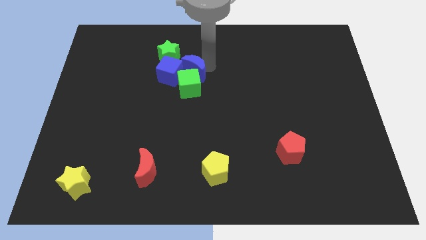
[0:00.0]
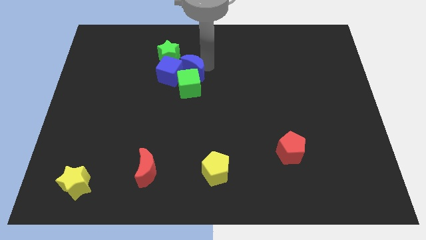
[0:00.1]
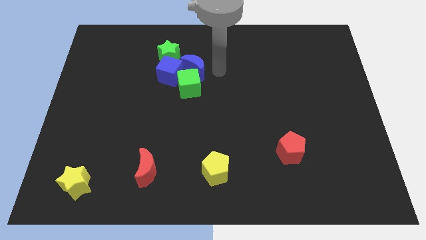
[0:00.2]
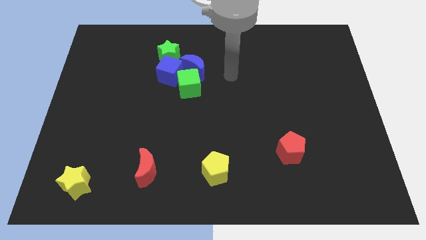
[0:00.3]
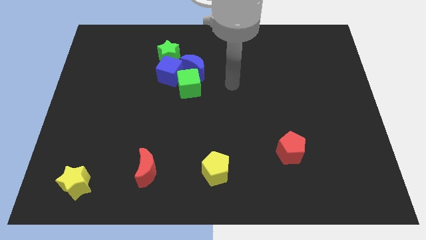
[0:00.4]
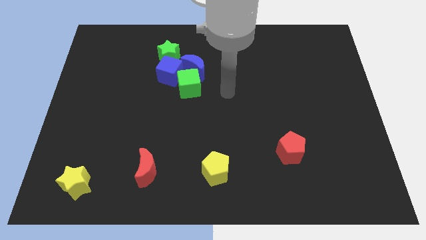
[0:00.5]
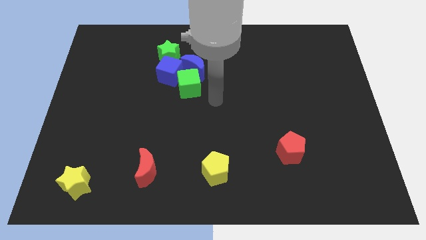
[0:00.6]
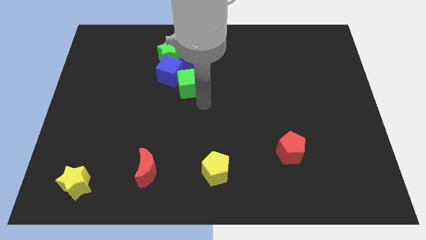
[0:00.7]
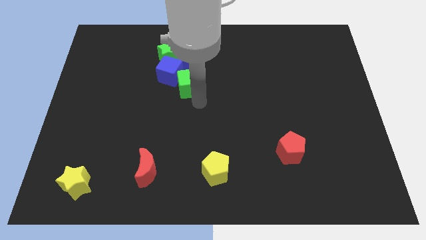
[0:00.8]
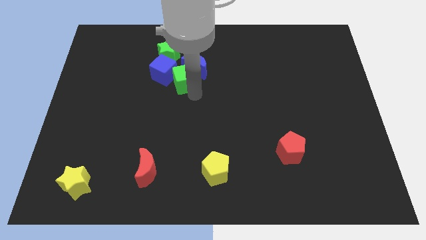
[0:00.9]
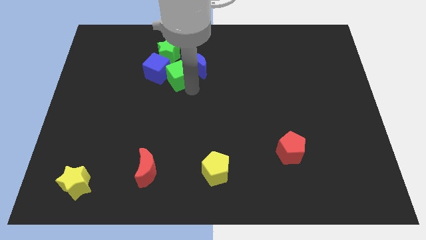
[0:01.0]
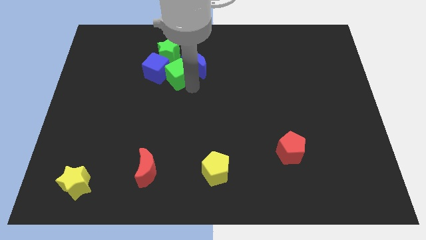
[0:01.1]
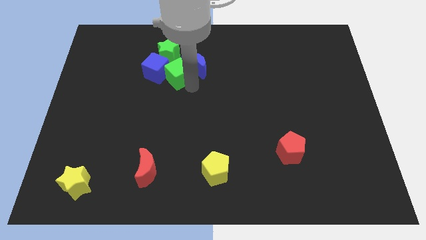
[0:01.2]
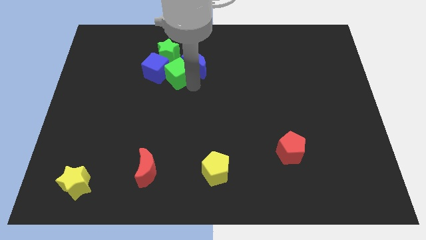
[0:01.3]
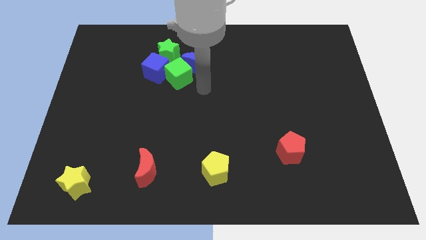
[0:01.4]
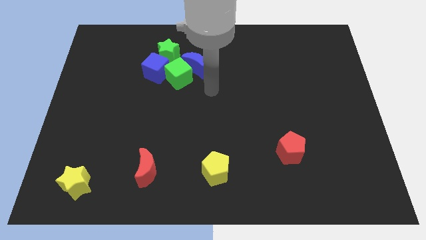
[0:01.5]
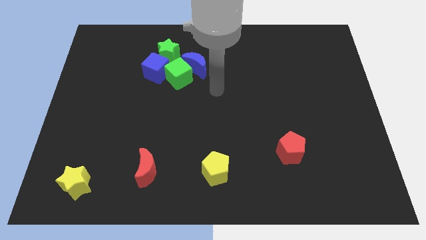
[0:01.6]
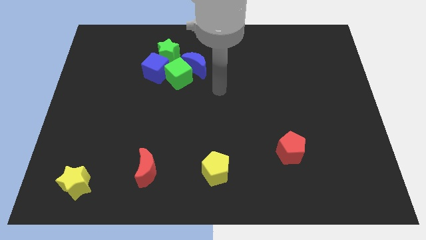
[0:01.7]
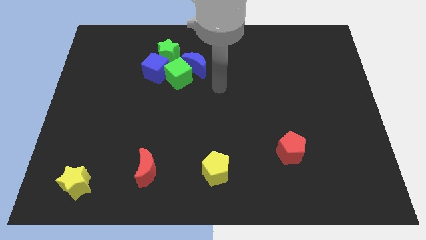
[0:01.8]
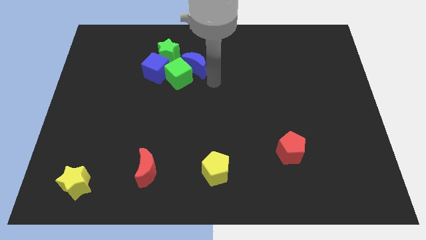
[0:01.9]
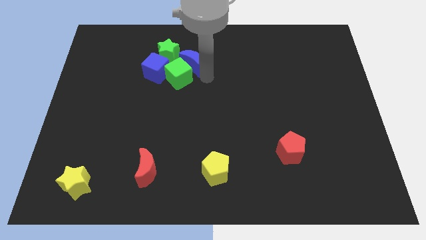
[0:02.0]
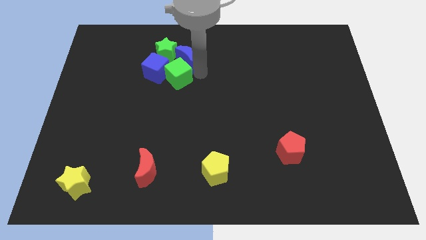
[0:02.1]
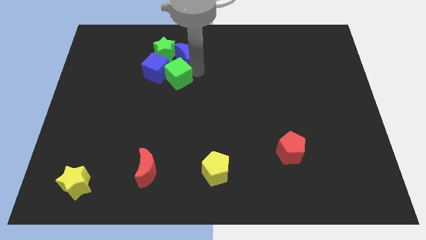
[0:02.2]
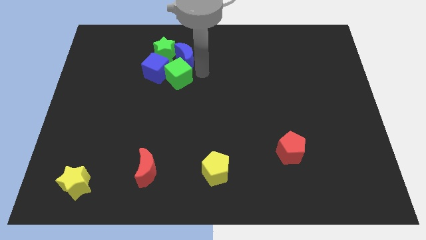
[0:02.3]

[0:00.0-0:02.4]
push blue crescent below green star

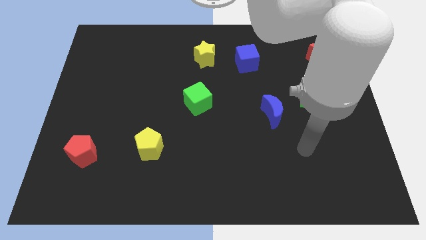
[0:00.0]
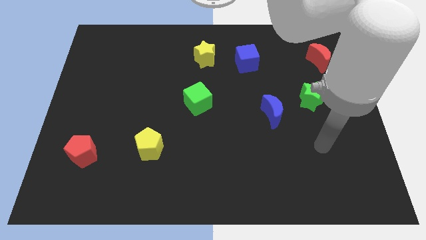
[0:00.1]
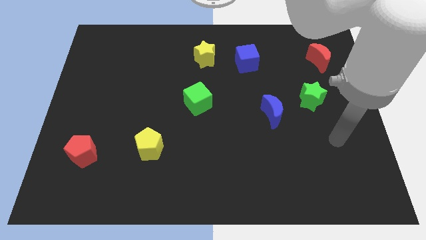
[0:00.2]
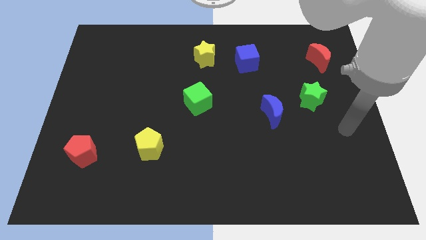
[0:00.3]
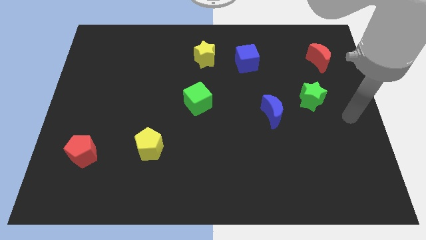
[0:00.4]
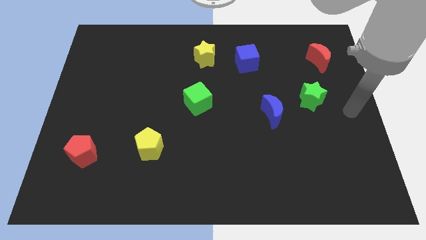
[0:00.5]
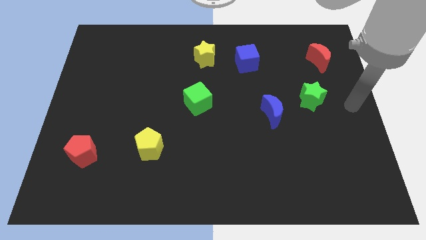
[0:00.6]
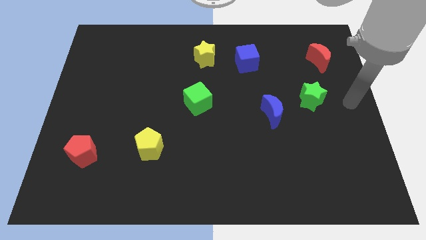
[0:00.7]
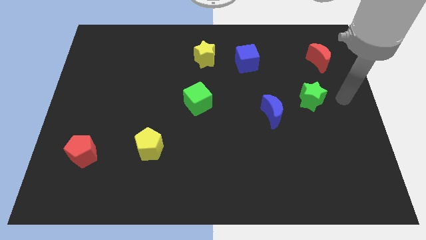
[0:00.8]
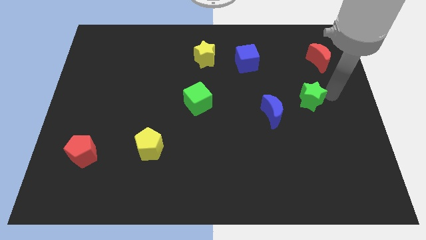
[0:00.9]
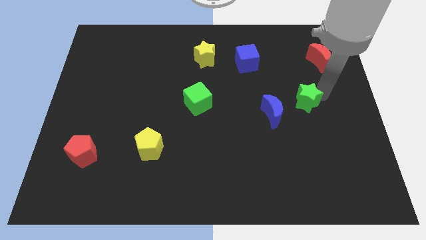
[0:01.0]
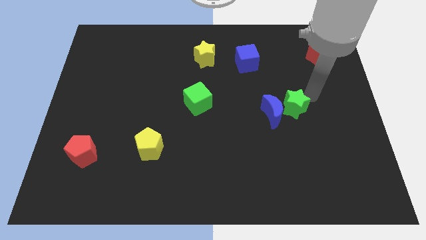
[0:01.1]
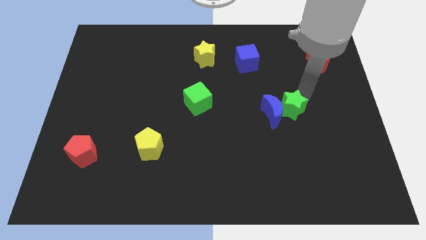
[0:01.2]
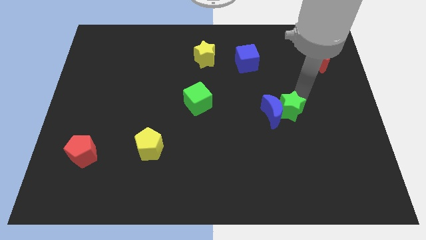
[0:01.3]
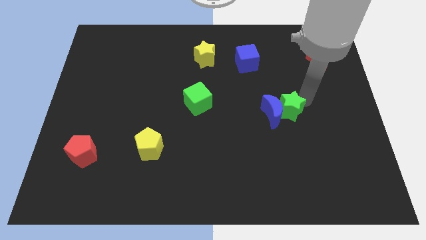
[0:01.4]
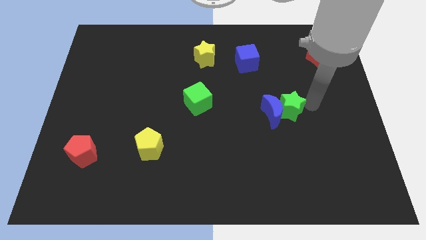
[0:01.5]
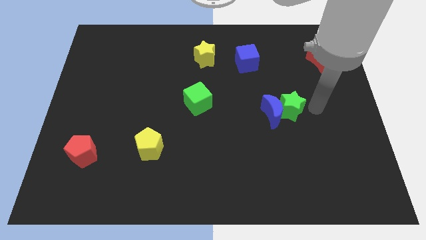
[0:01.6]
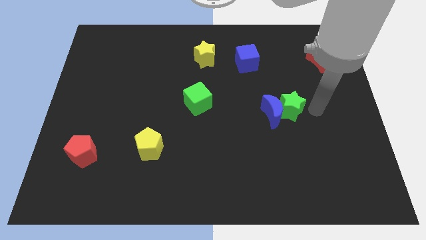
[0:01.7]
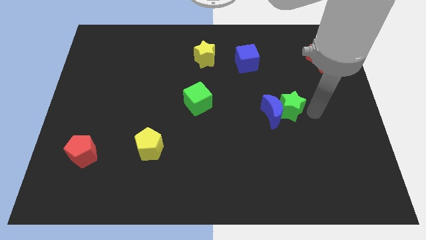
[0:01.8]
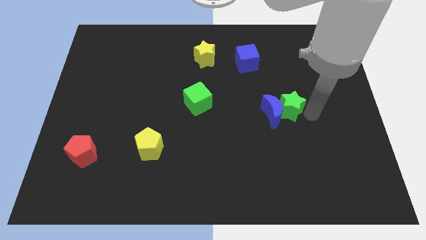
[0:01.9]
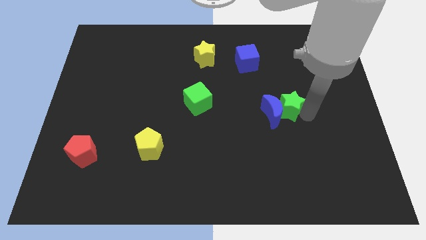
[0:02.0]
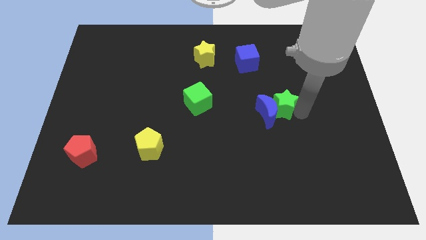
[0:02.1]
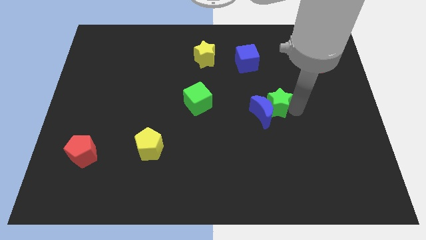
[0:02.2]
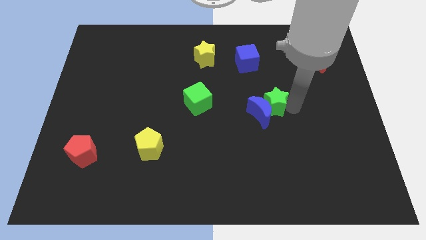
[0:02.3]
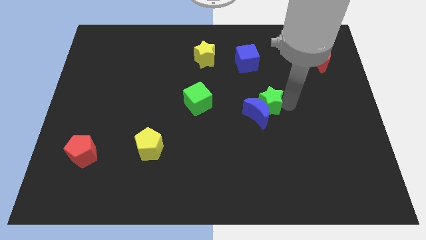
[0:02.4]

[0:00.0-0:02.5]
put green star into the blue moon

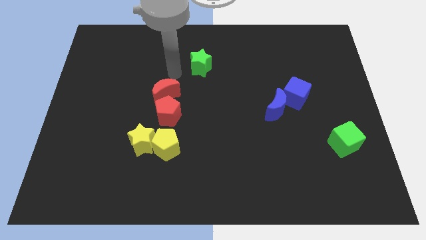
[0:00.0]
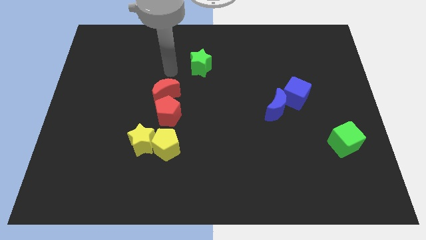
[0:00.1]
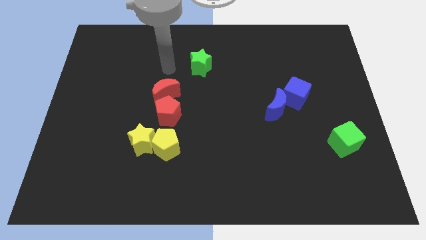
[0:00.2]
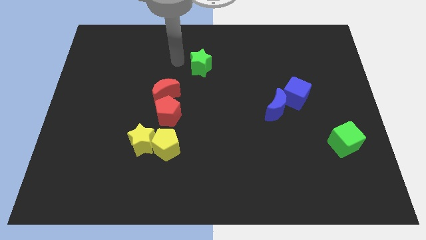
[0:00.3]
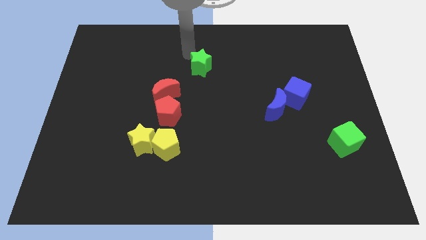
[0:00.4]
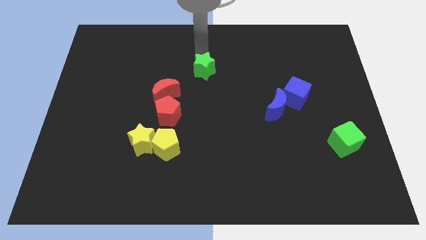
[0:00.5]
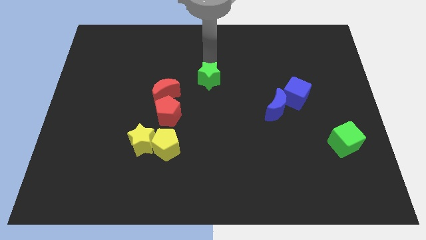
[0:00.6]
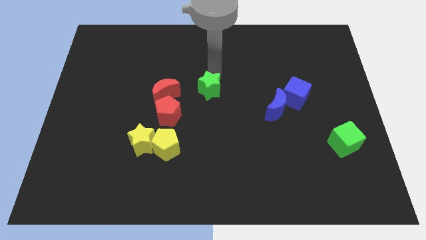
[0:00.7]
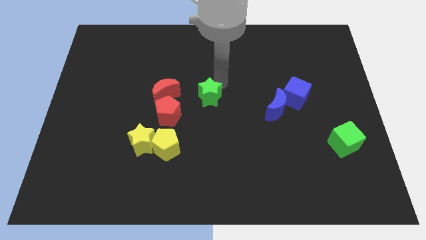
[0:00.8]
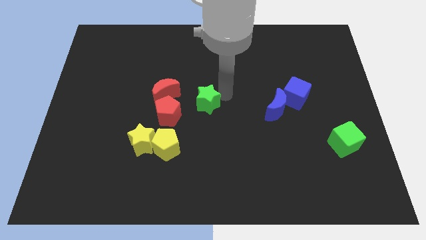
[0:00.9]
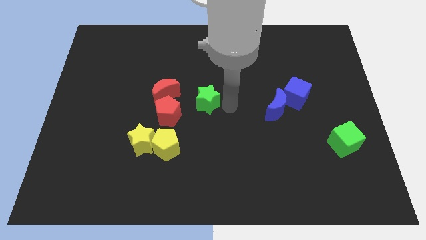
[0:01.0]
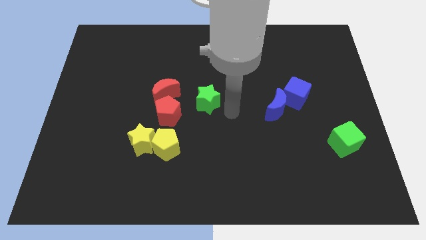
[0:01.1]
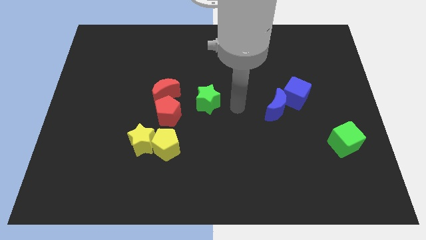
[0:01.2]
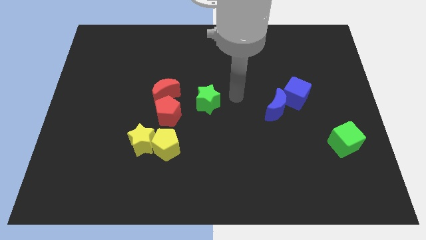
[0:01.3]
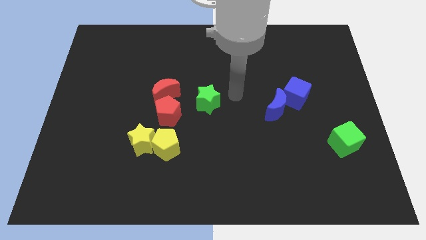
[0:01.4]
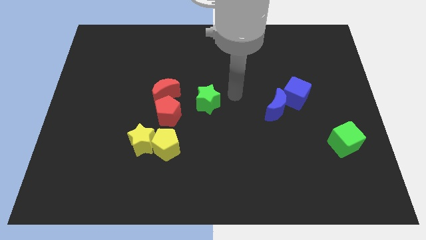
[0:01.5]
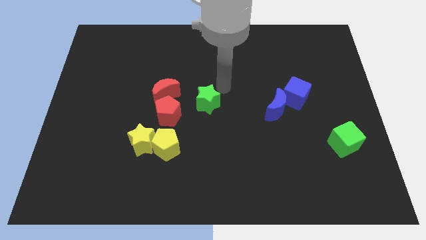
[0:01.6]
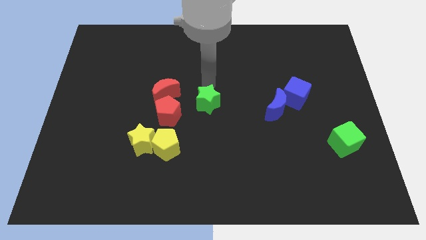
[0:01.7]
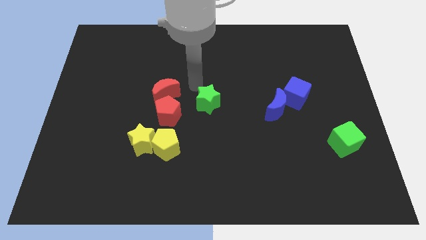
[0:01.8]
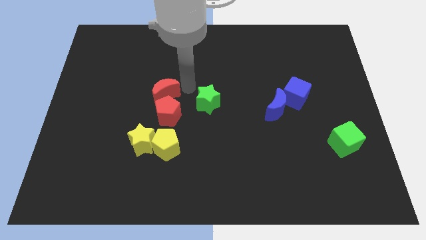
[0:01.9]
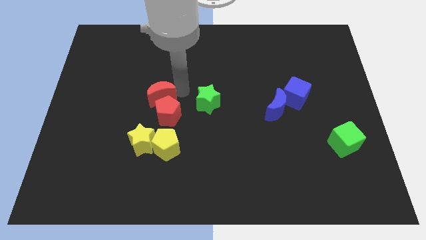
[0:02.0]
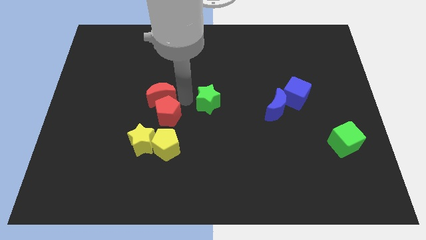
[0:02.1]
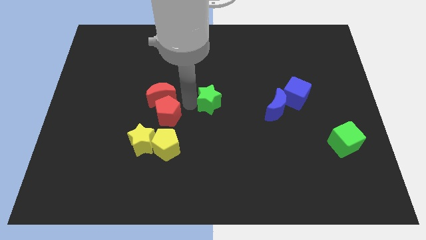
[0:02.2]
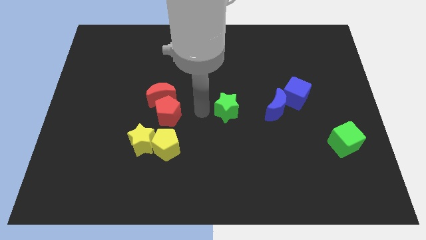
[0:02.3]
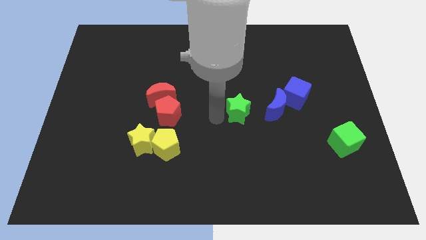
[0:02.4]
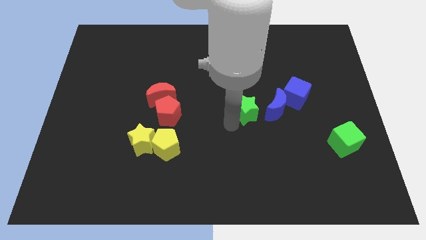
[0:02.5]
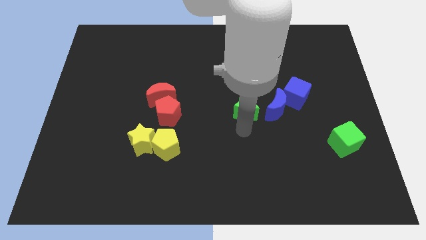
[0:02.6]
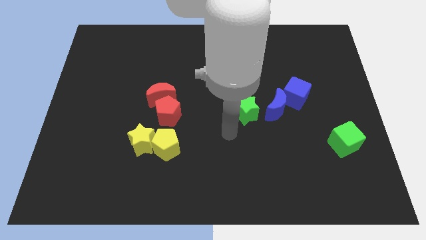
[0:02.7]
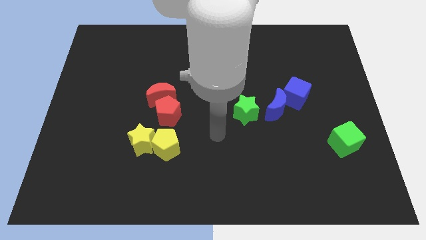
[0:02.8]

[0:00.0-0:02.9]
push the green star towards the bottom of the board

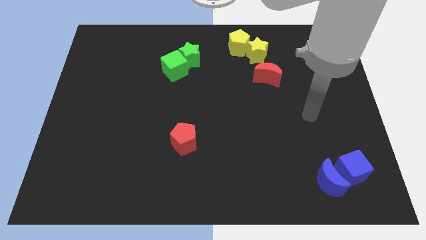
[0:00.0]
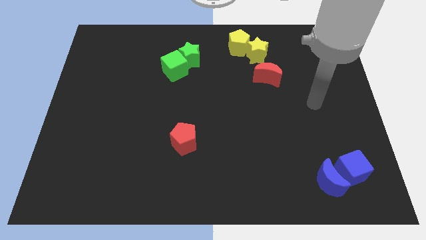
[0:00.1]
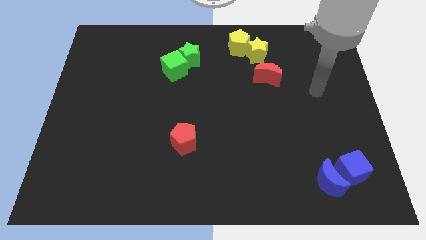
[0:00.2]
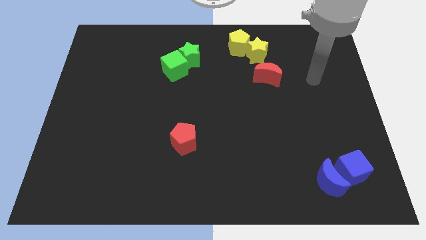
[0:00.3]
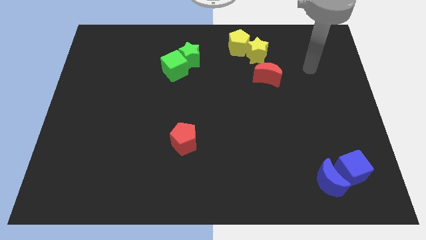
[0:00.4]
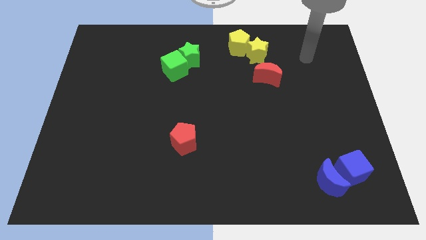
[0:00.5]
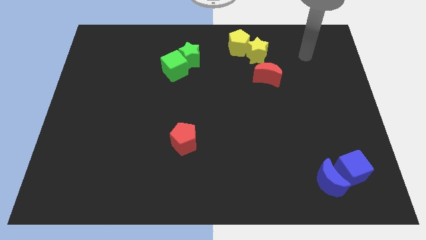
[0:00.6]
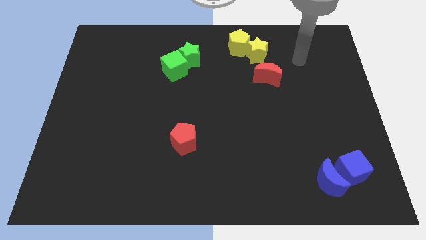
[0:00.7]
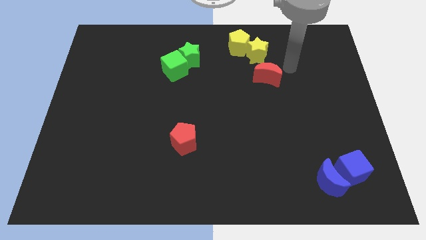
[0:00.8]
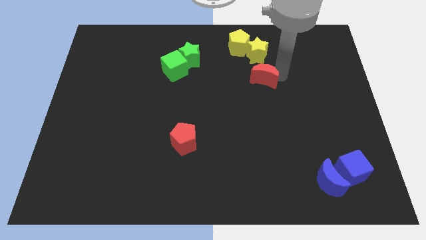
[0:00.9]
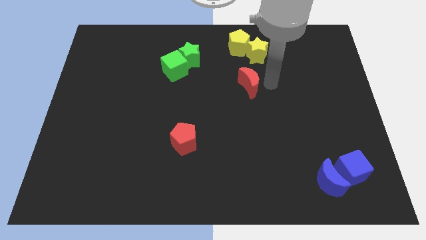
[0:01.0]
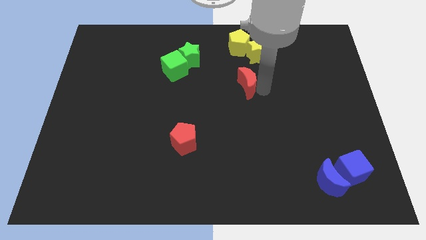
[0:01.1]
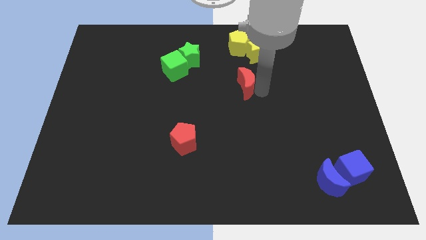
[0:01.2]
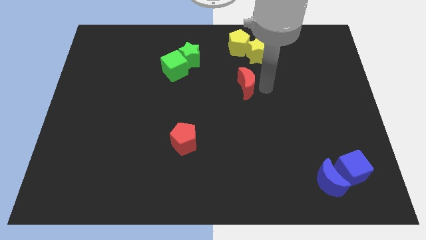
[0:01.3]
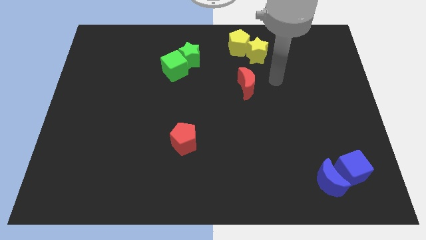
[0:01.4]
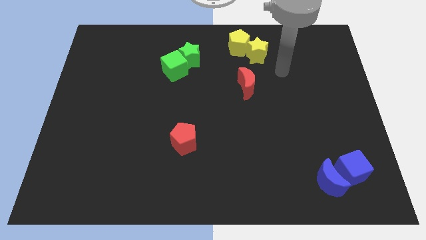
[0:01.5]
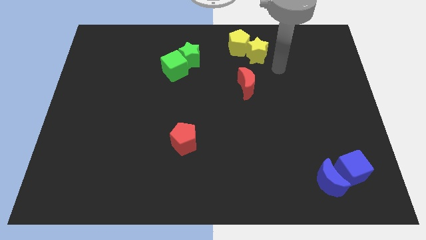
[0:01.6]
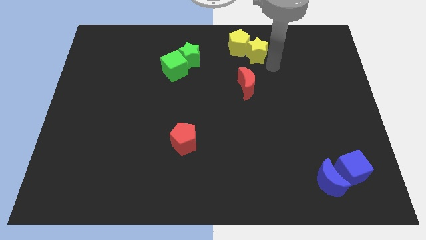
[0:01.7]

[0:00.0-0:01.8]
push the red moon below yellow blocks
